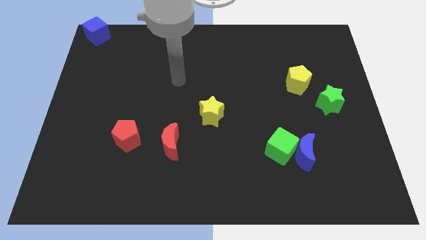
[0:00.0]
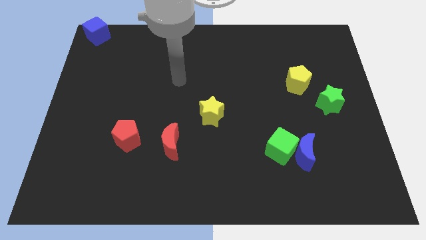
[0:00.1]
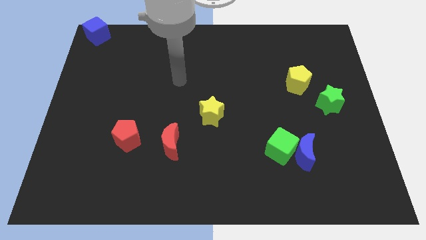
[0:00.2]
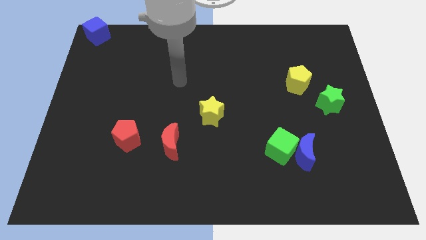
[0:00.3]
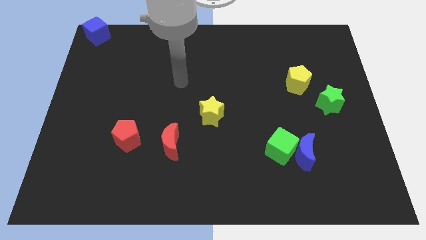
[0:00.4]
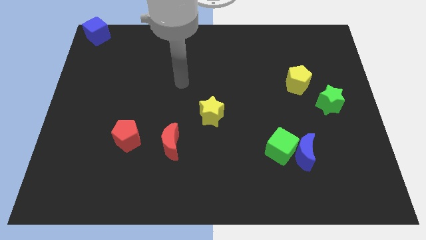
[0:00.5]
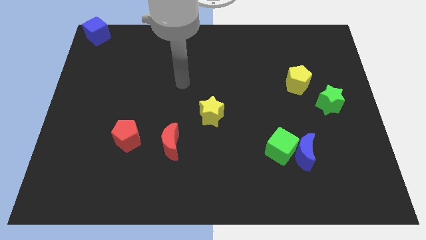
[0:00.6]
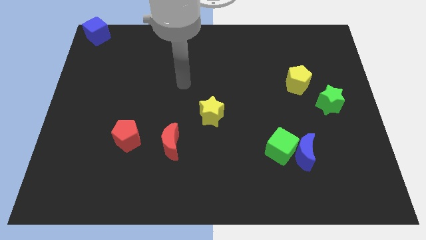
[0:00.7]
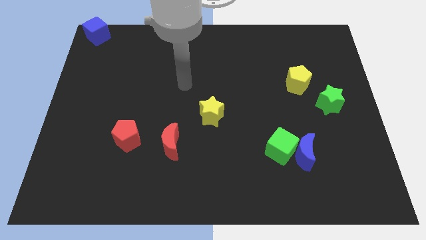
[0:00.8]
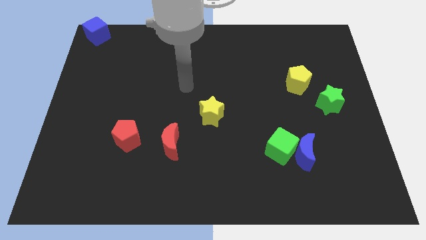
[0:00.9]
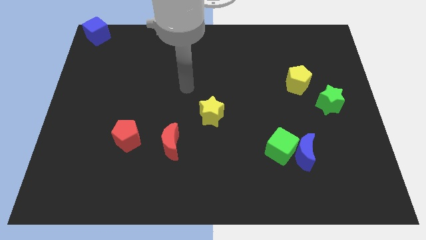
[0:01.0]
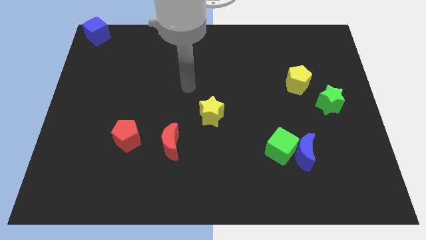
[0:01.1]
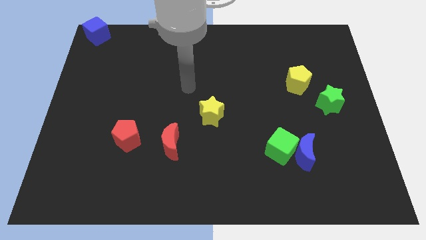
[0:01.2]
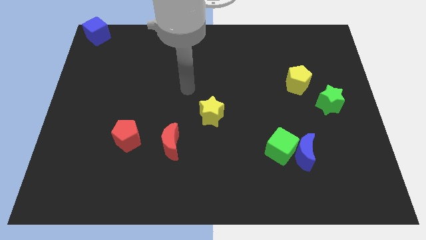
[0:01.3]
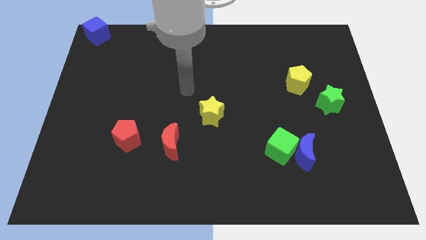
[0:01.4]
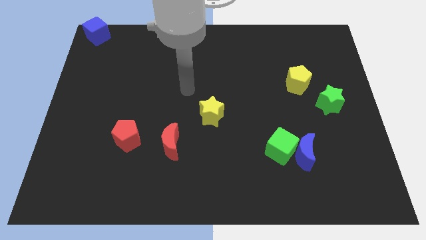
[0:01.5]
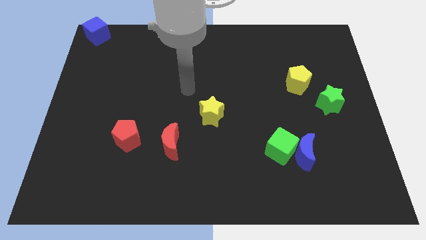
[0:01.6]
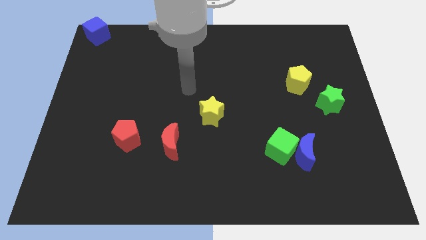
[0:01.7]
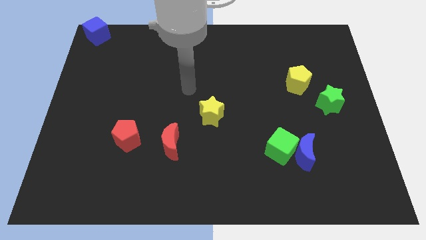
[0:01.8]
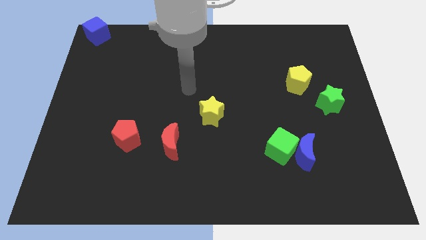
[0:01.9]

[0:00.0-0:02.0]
place your arm to the center of the board

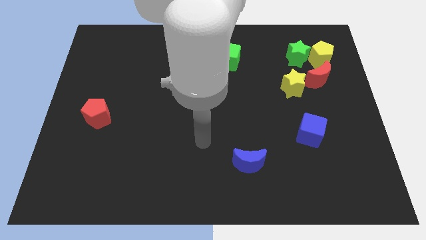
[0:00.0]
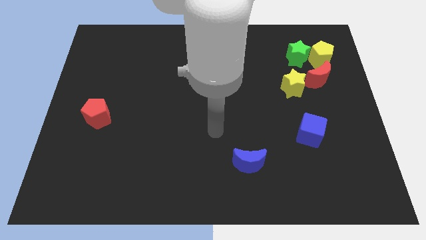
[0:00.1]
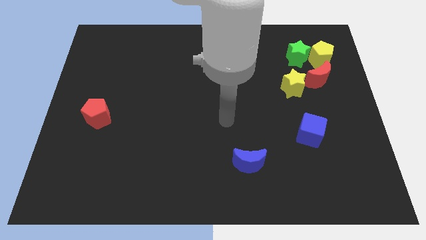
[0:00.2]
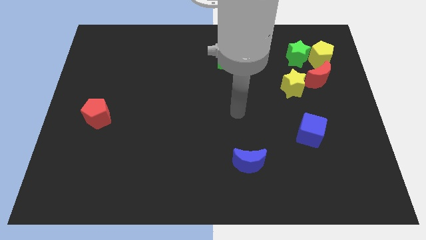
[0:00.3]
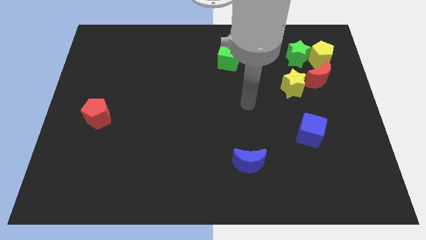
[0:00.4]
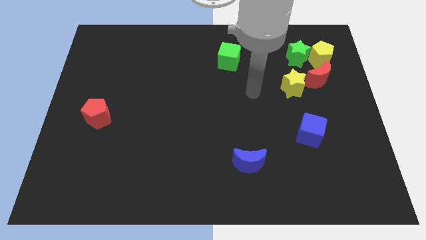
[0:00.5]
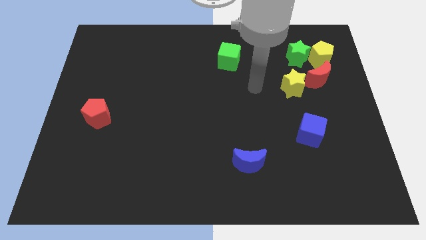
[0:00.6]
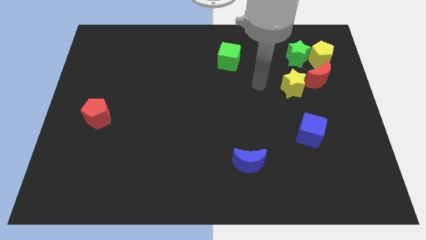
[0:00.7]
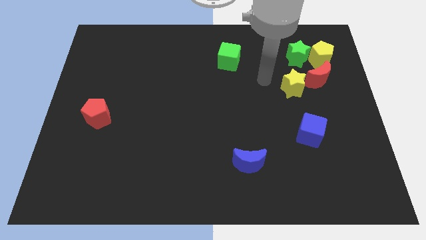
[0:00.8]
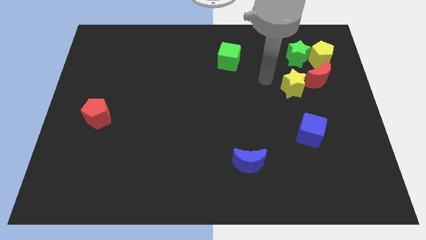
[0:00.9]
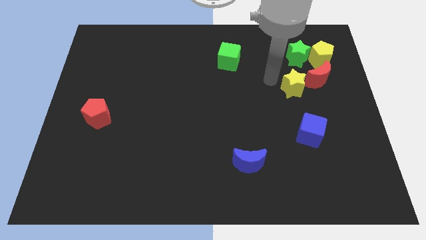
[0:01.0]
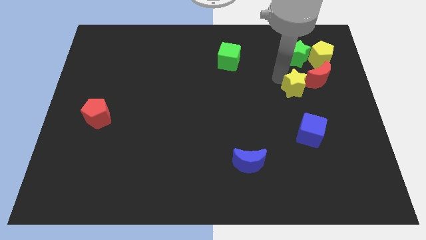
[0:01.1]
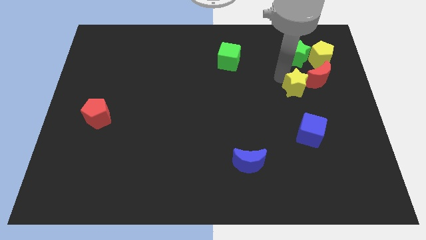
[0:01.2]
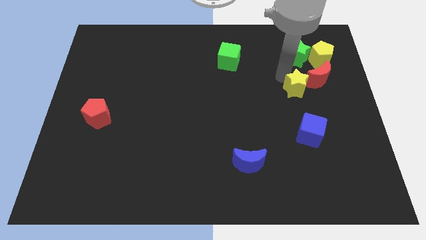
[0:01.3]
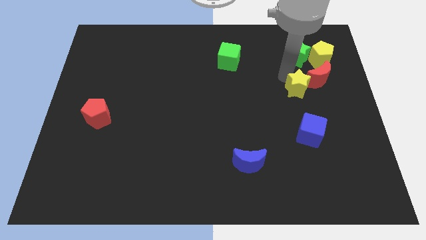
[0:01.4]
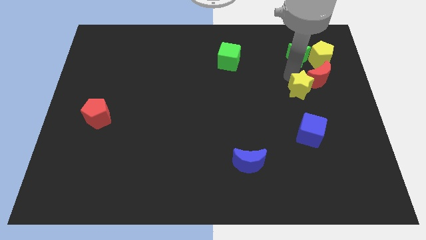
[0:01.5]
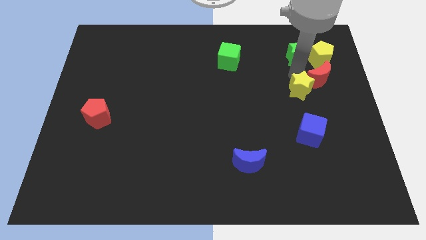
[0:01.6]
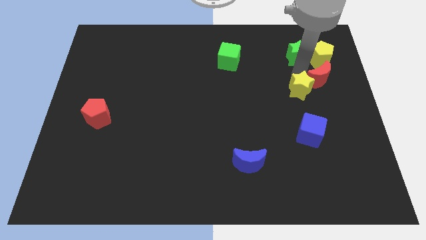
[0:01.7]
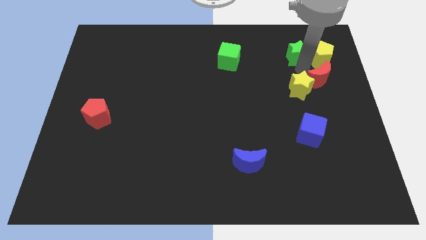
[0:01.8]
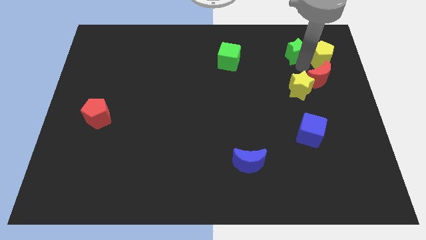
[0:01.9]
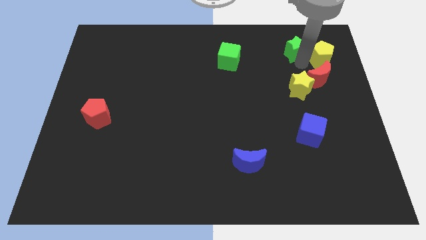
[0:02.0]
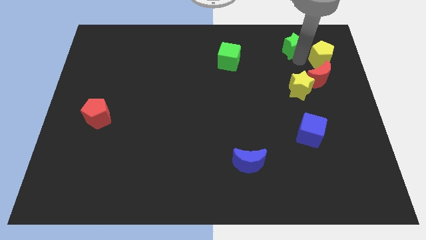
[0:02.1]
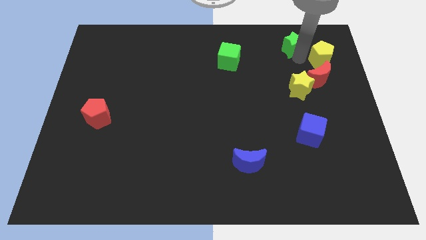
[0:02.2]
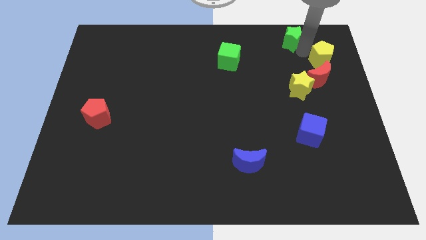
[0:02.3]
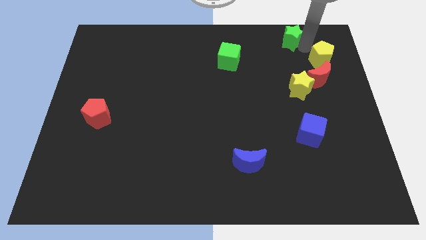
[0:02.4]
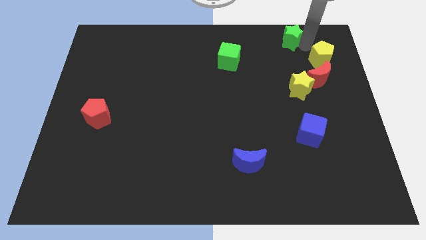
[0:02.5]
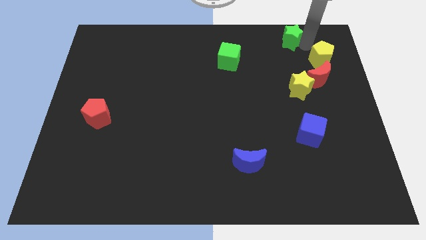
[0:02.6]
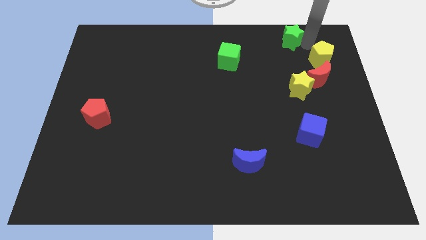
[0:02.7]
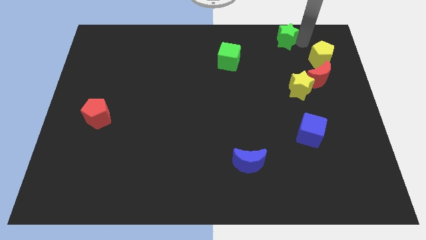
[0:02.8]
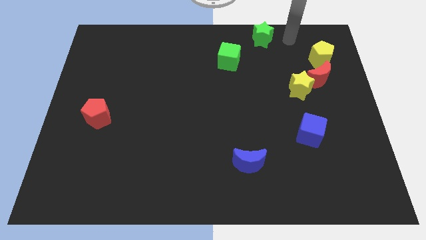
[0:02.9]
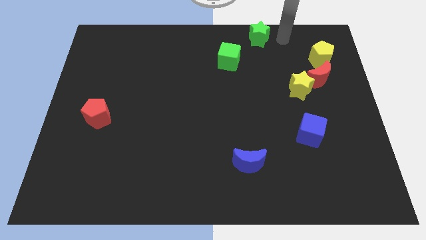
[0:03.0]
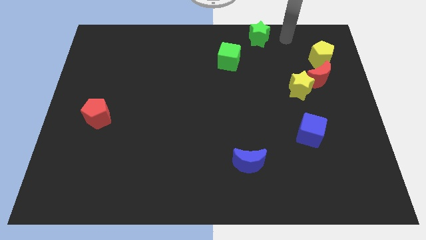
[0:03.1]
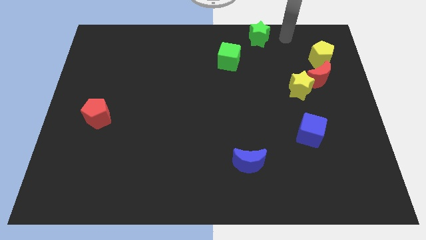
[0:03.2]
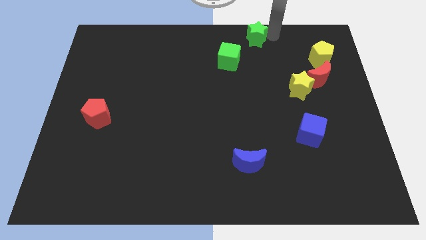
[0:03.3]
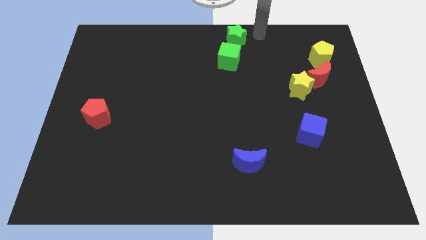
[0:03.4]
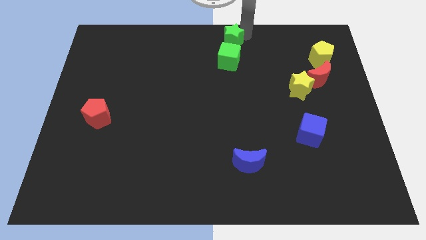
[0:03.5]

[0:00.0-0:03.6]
place the green star above the green cube

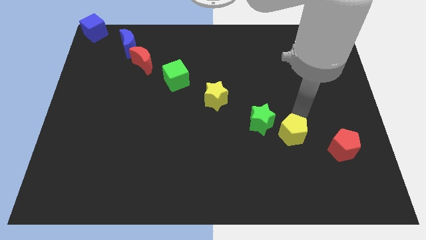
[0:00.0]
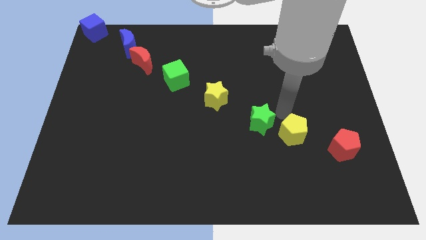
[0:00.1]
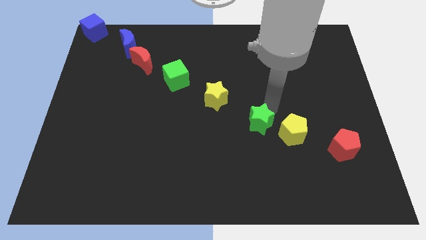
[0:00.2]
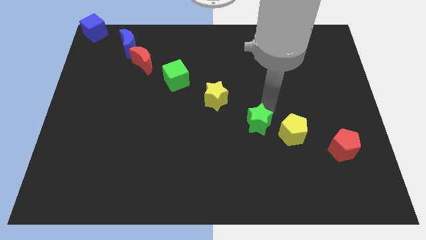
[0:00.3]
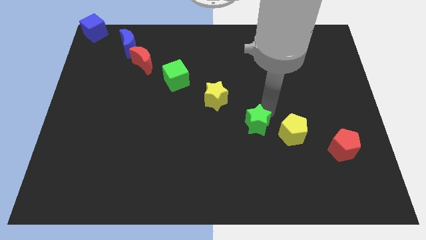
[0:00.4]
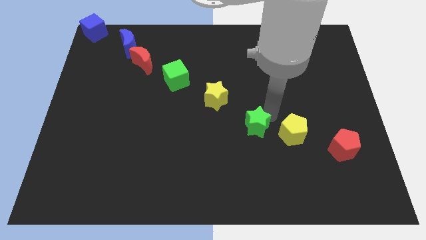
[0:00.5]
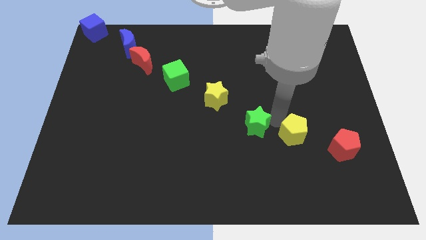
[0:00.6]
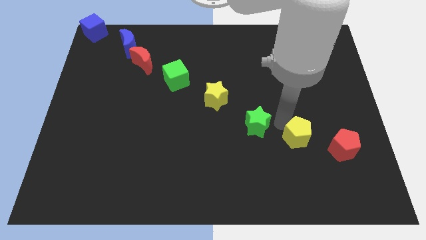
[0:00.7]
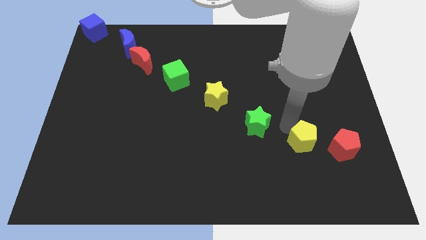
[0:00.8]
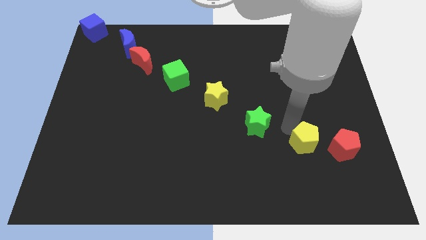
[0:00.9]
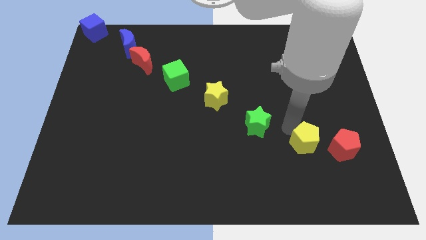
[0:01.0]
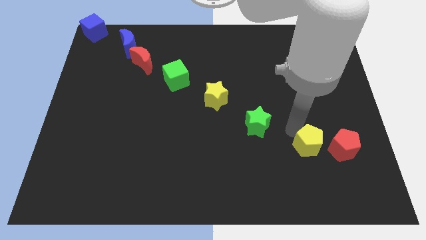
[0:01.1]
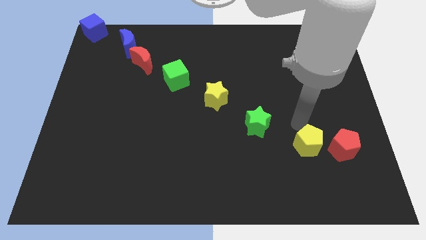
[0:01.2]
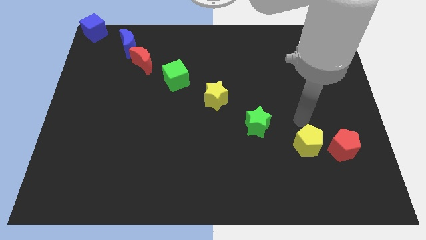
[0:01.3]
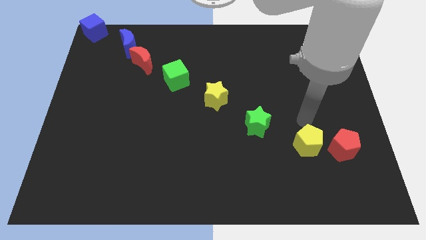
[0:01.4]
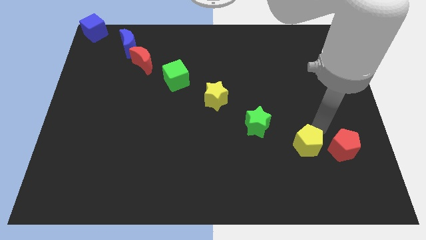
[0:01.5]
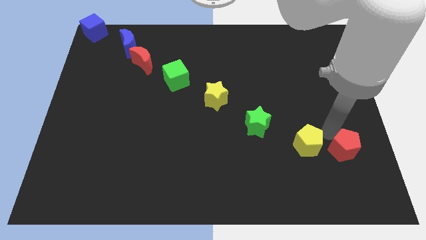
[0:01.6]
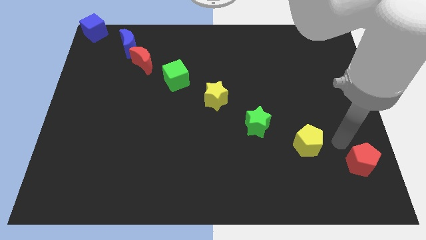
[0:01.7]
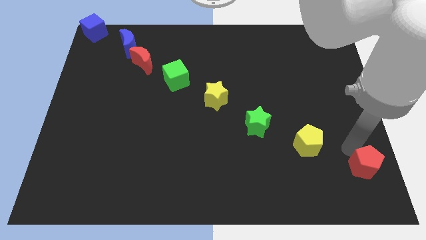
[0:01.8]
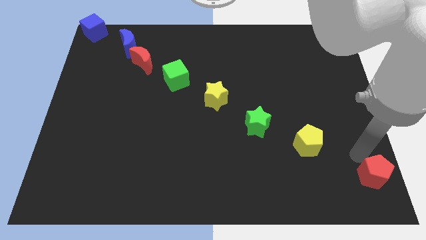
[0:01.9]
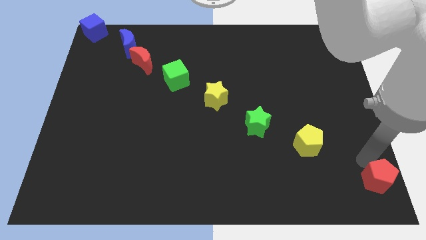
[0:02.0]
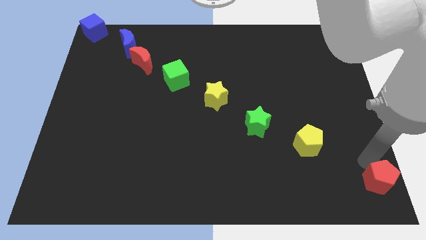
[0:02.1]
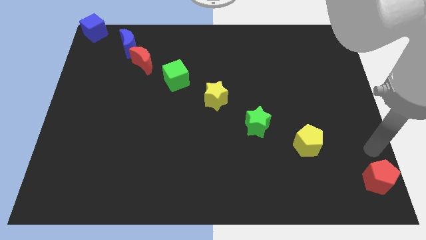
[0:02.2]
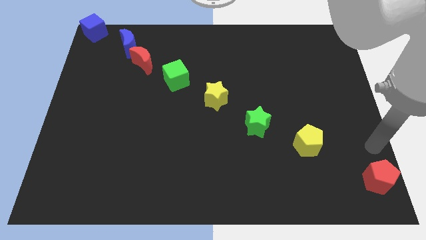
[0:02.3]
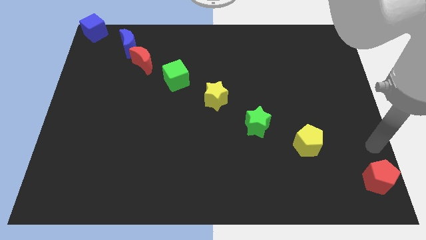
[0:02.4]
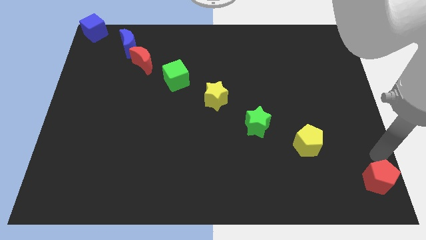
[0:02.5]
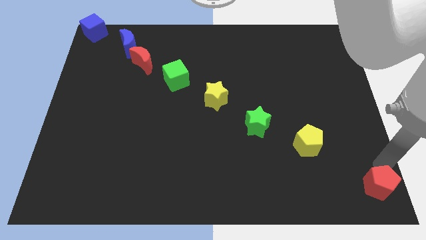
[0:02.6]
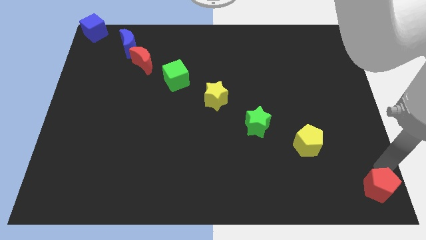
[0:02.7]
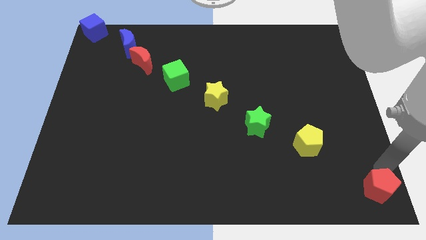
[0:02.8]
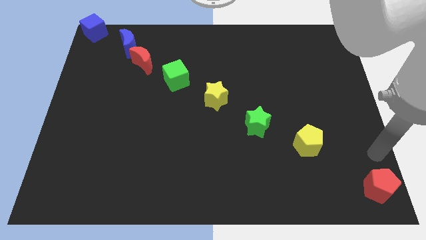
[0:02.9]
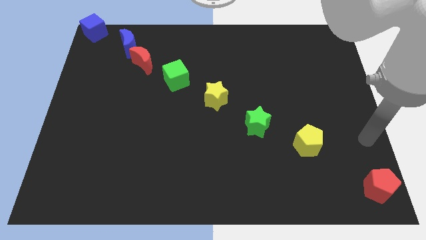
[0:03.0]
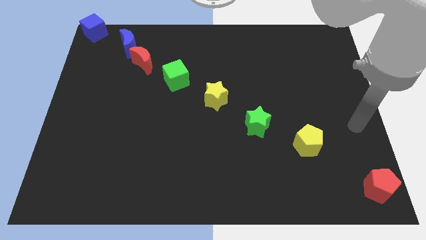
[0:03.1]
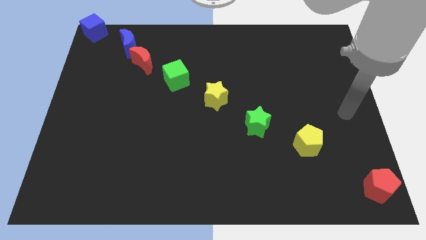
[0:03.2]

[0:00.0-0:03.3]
move the red pentagon towards the bottom right of the board

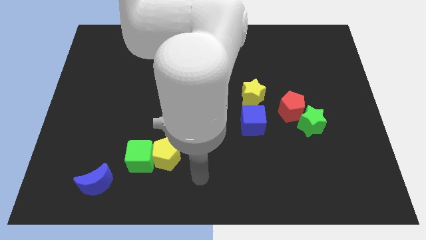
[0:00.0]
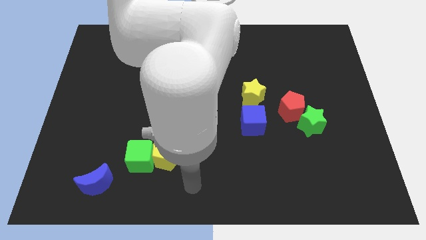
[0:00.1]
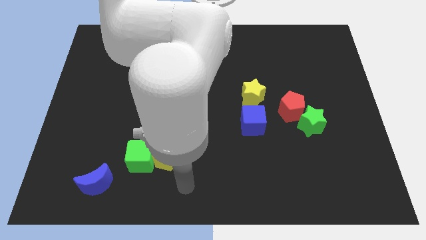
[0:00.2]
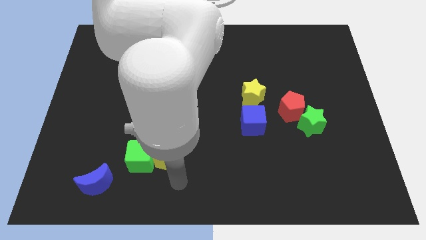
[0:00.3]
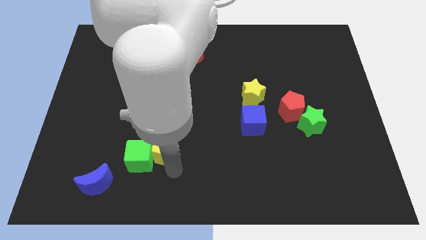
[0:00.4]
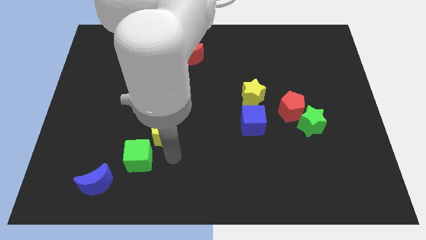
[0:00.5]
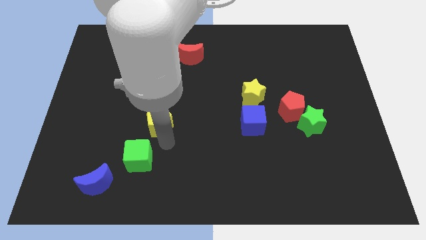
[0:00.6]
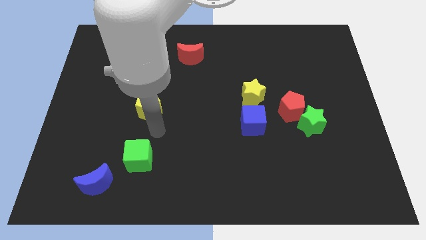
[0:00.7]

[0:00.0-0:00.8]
separate the yellow pentagon from the green cube
